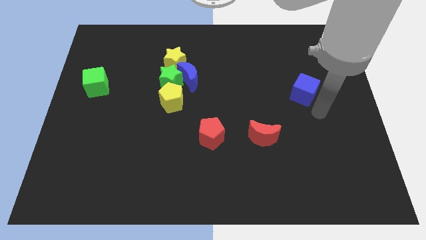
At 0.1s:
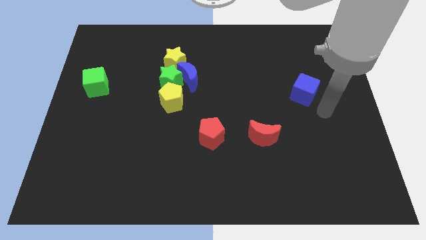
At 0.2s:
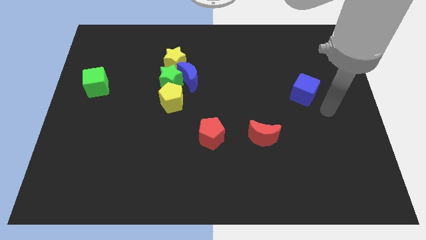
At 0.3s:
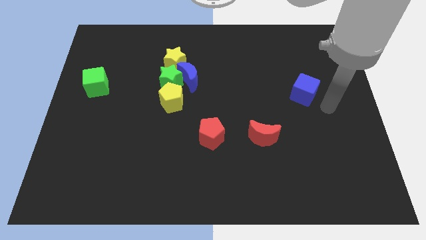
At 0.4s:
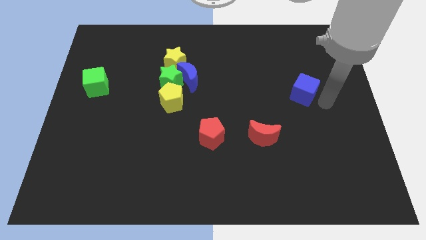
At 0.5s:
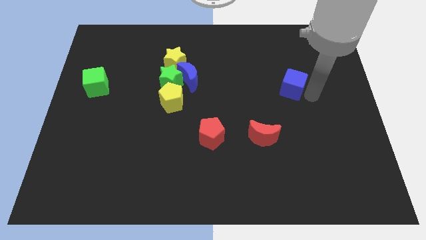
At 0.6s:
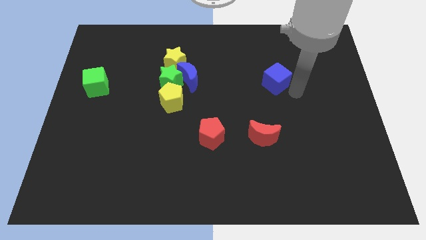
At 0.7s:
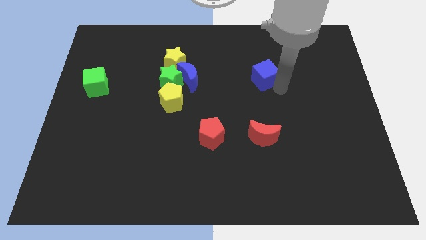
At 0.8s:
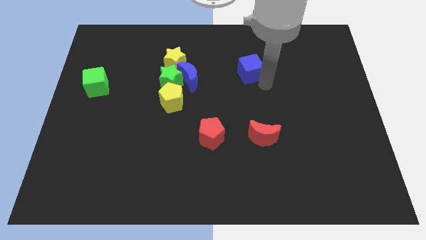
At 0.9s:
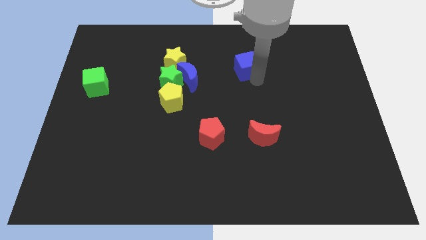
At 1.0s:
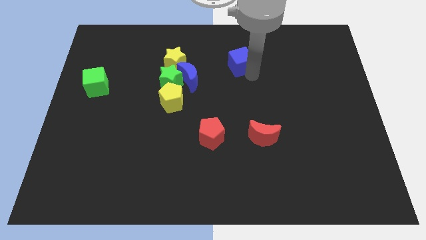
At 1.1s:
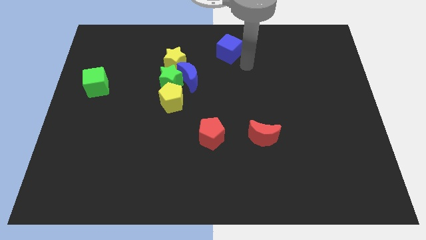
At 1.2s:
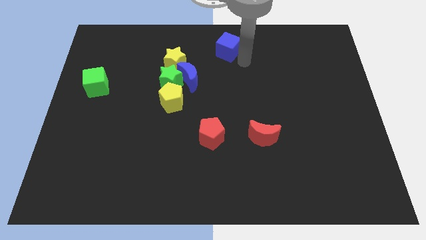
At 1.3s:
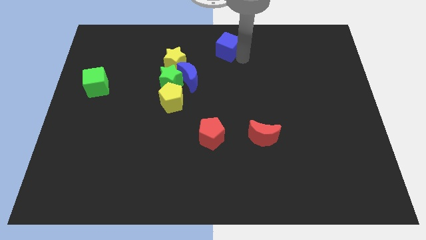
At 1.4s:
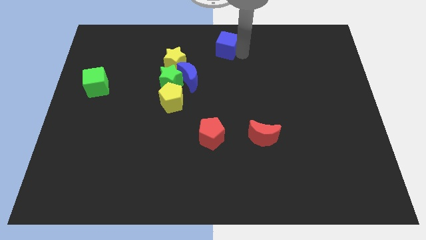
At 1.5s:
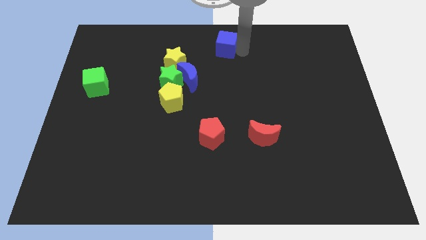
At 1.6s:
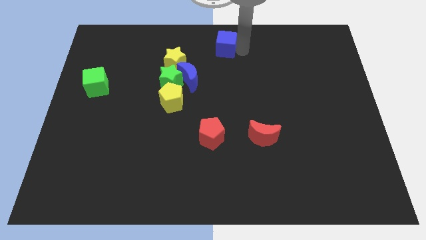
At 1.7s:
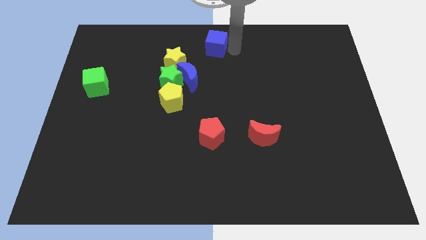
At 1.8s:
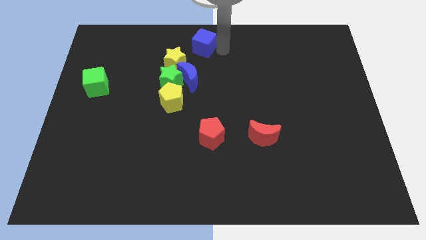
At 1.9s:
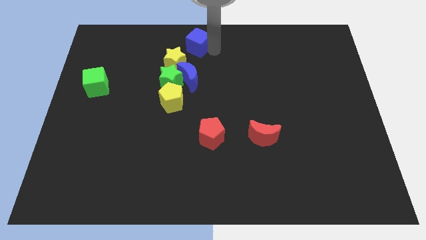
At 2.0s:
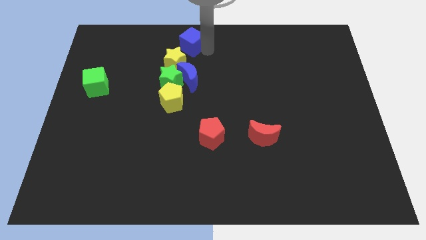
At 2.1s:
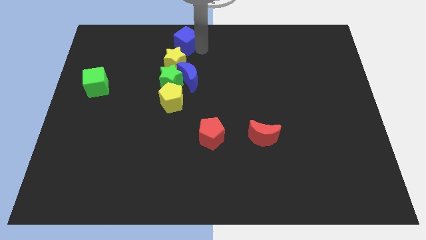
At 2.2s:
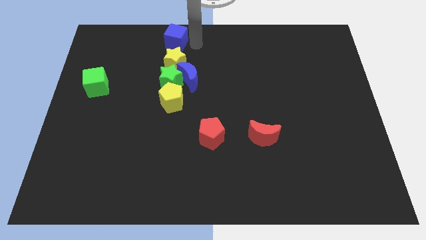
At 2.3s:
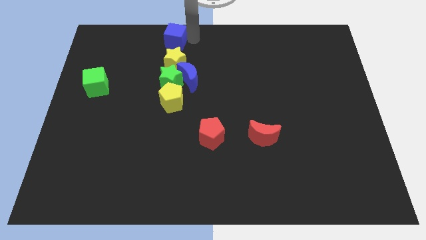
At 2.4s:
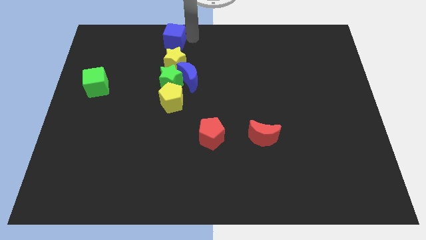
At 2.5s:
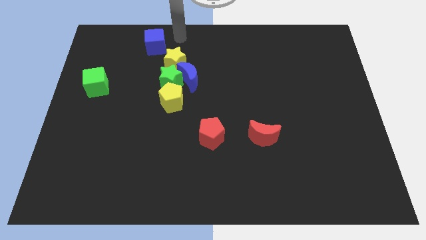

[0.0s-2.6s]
put the blue cube at the top of yellow star

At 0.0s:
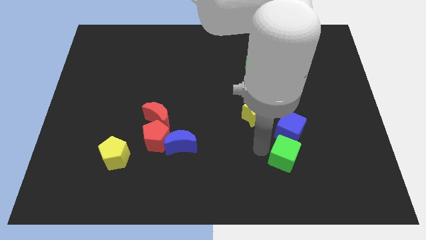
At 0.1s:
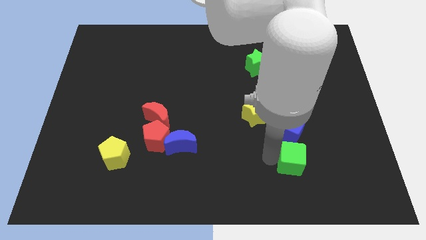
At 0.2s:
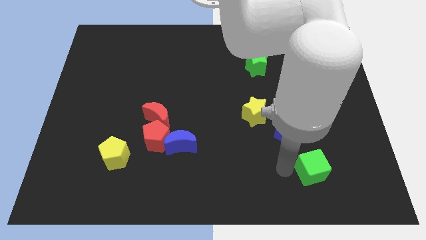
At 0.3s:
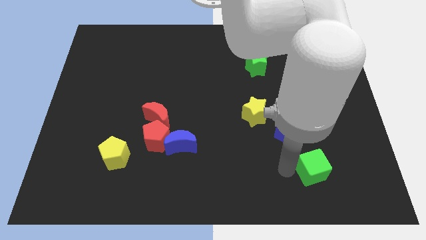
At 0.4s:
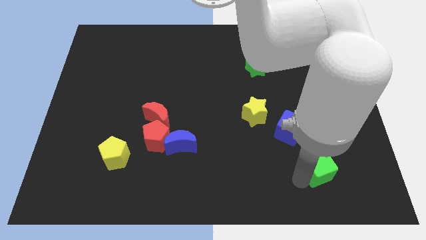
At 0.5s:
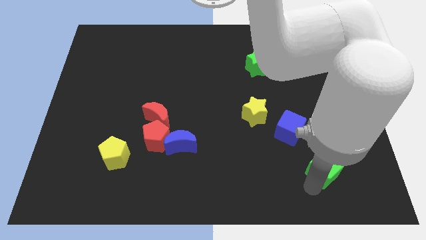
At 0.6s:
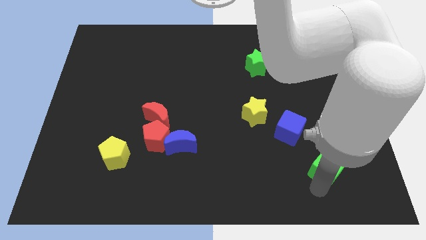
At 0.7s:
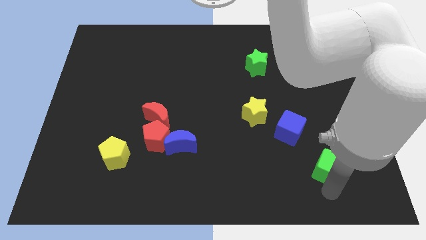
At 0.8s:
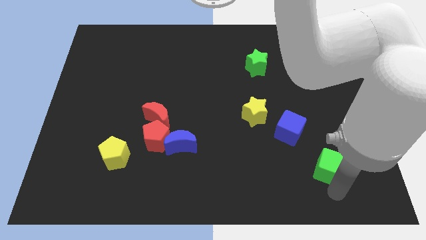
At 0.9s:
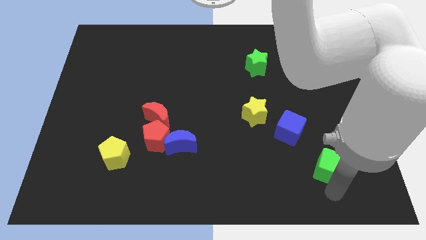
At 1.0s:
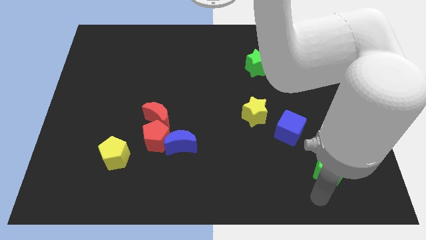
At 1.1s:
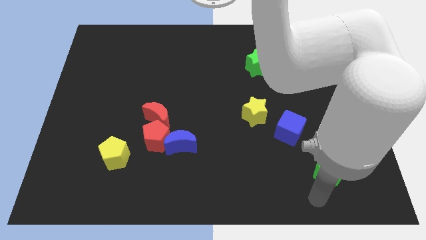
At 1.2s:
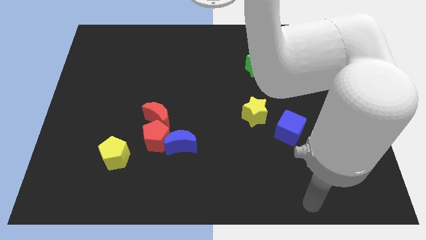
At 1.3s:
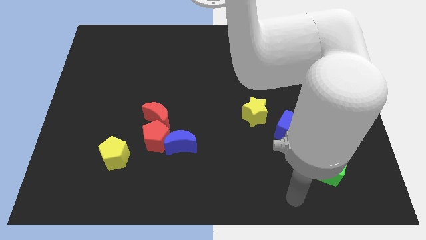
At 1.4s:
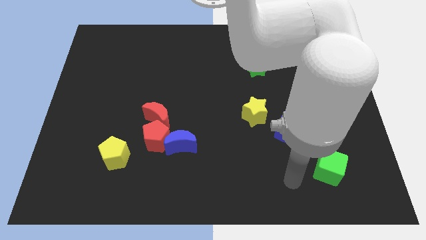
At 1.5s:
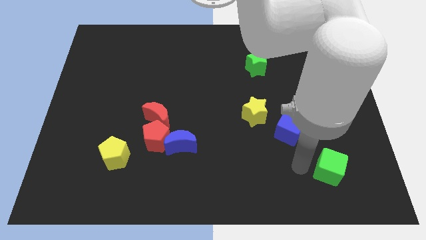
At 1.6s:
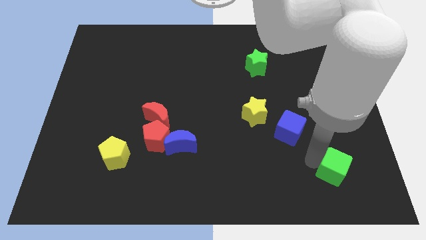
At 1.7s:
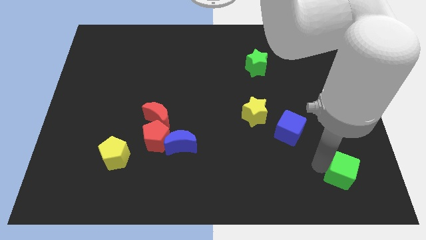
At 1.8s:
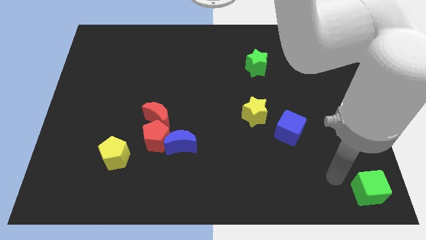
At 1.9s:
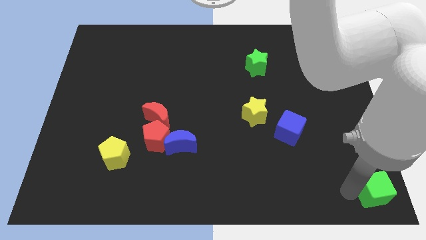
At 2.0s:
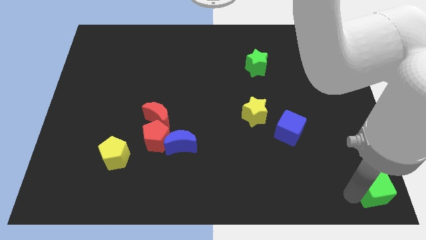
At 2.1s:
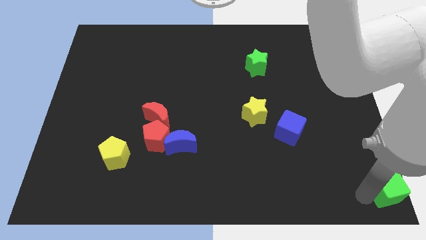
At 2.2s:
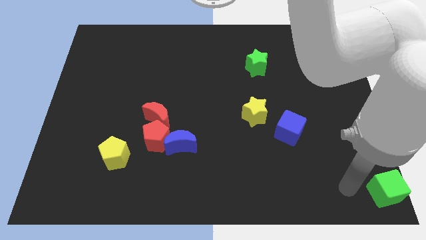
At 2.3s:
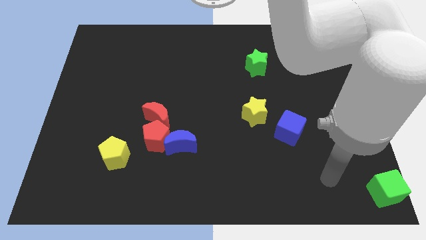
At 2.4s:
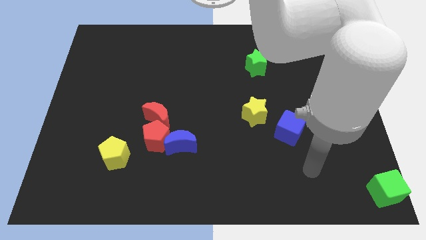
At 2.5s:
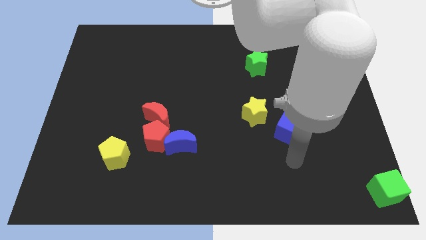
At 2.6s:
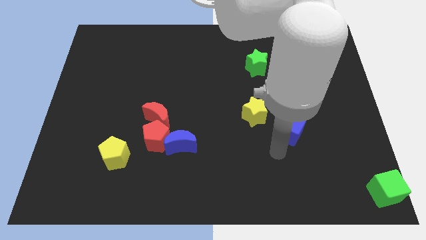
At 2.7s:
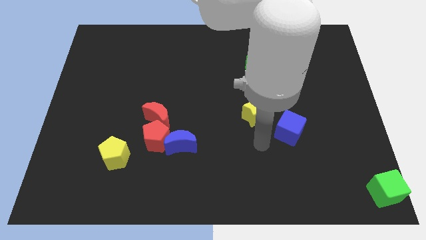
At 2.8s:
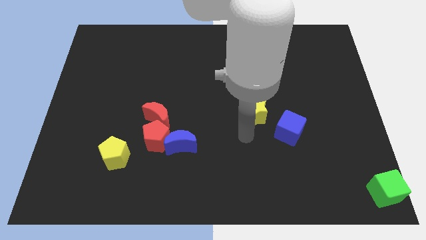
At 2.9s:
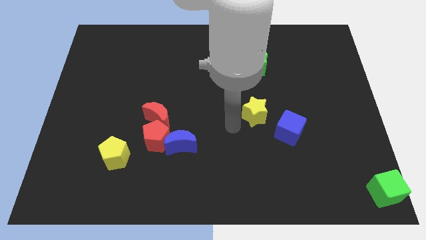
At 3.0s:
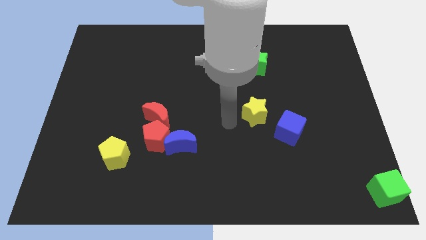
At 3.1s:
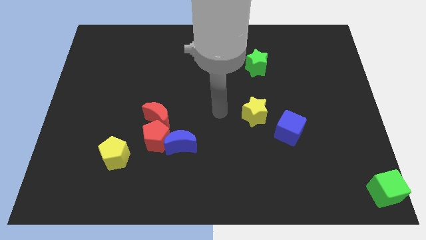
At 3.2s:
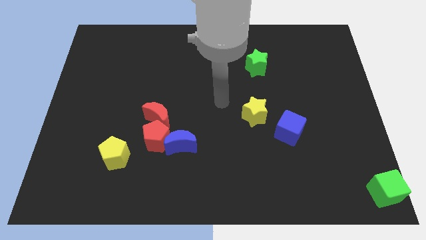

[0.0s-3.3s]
push the green cube to the bottom right corner of the board

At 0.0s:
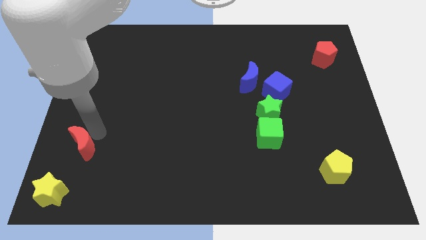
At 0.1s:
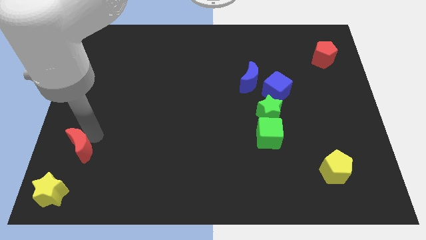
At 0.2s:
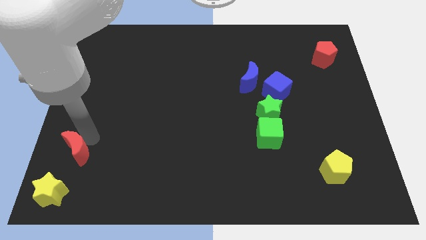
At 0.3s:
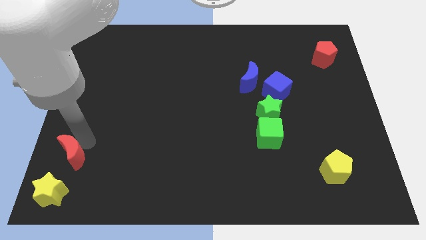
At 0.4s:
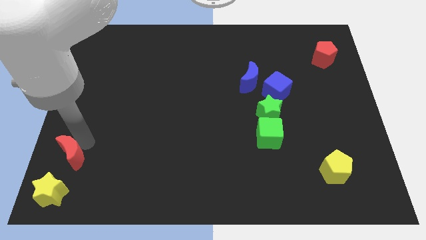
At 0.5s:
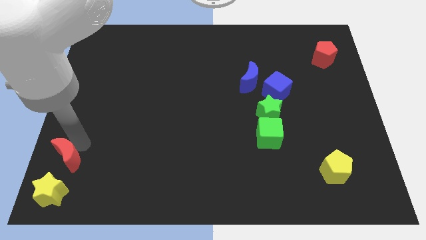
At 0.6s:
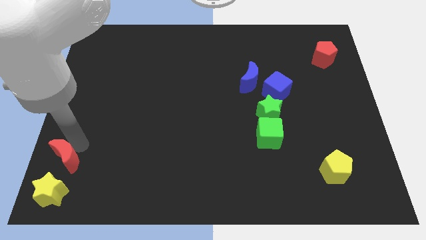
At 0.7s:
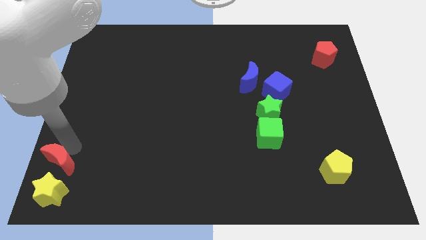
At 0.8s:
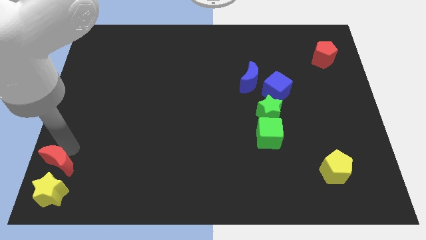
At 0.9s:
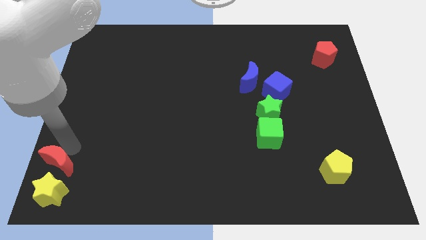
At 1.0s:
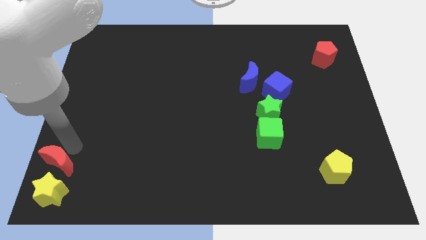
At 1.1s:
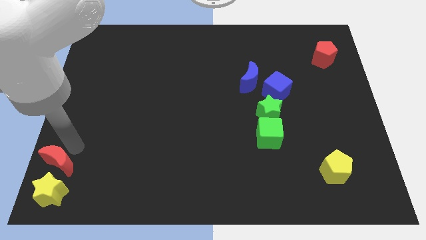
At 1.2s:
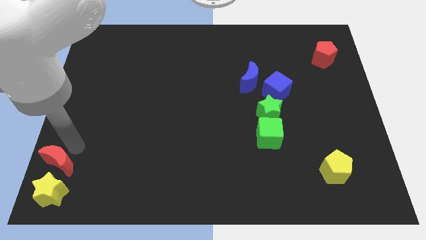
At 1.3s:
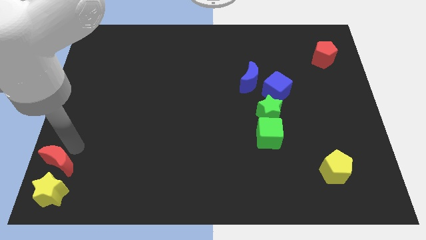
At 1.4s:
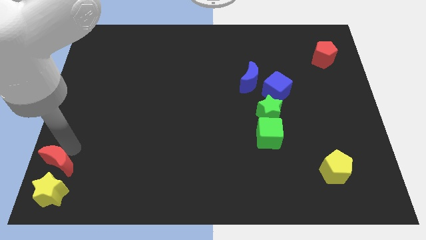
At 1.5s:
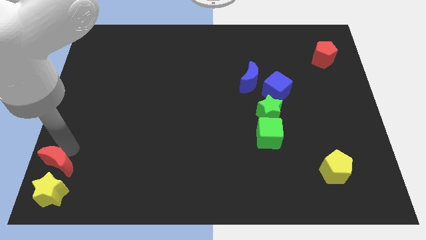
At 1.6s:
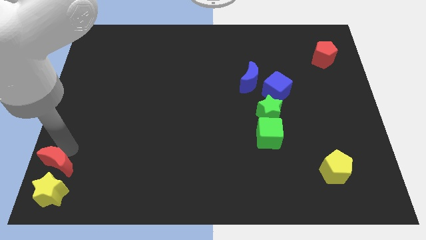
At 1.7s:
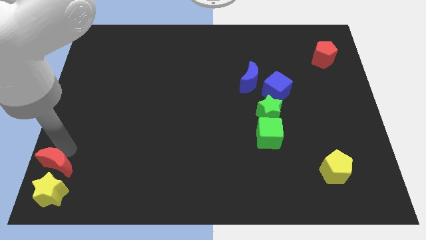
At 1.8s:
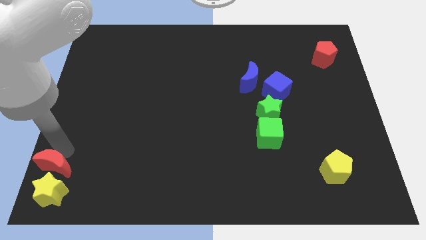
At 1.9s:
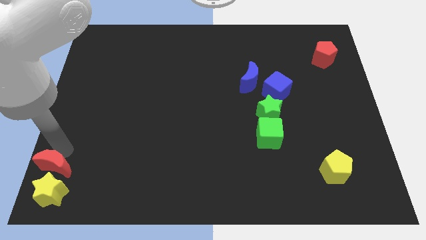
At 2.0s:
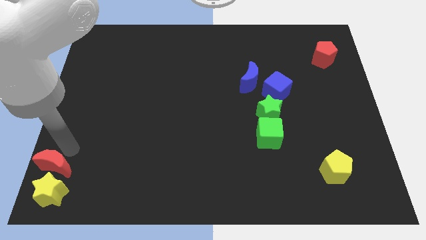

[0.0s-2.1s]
place red crescent above yellow star

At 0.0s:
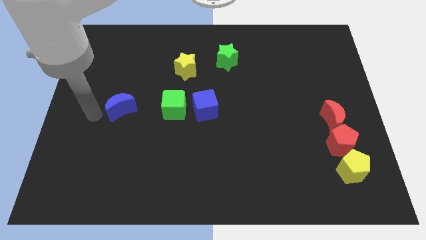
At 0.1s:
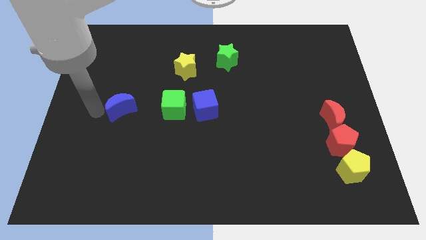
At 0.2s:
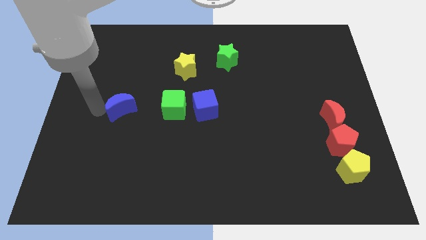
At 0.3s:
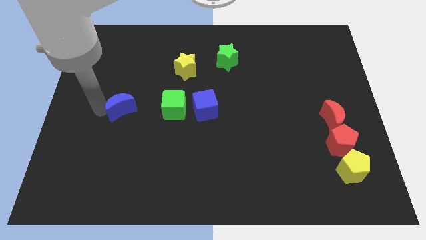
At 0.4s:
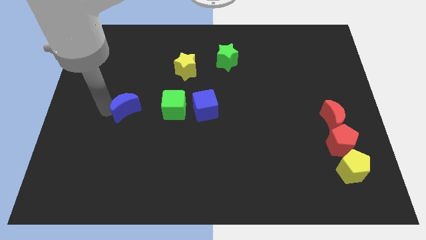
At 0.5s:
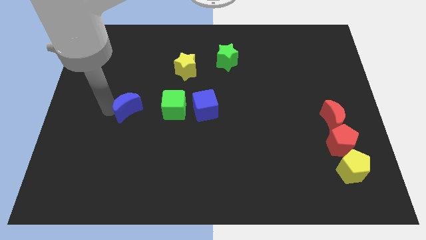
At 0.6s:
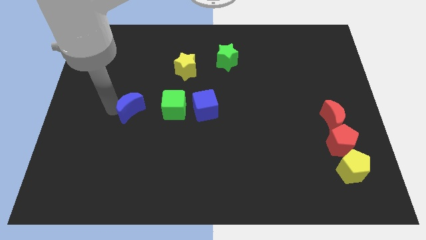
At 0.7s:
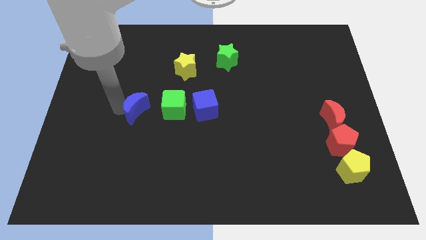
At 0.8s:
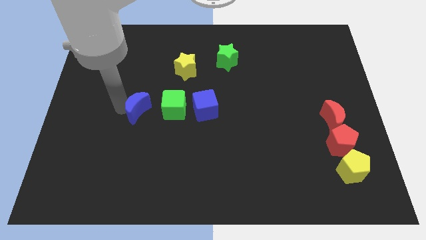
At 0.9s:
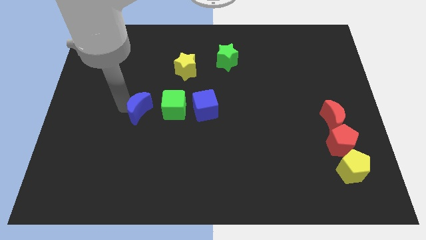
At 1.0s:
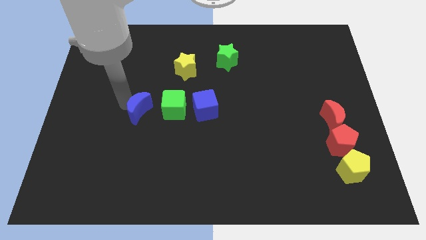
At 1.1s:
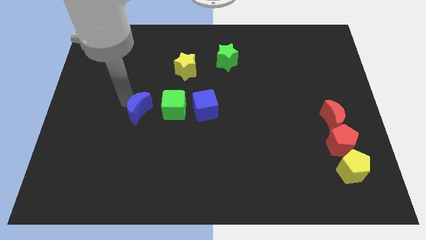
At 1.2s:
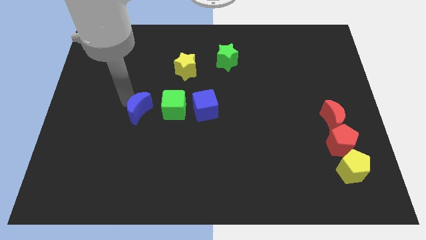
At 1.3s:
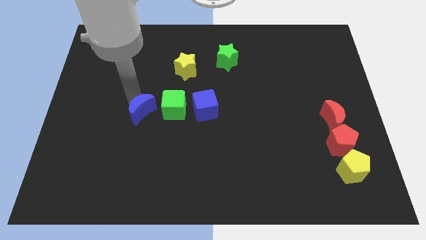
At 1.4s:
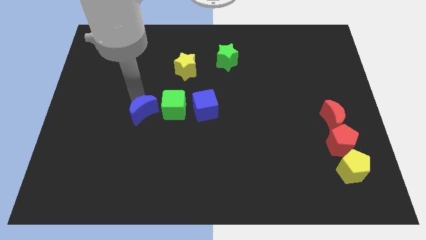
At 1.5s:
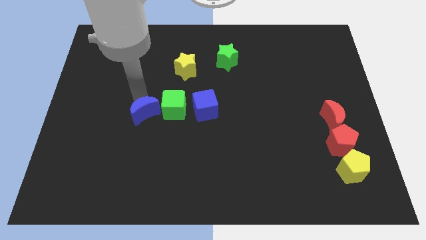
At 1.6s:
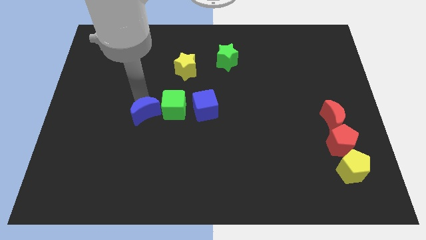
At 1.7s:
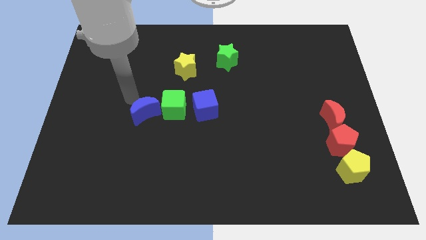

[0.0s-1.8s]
move the blue crescent next to the left side of the green cube
